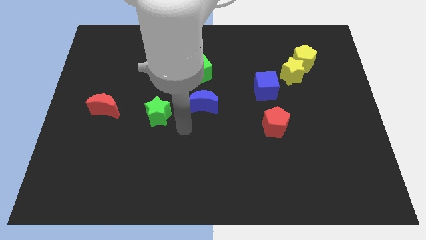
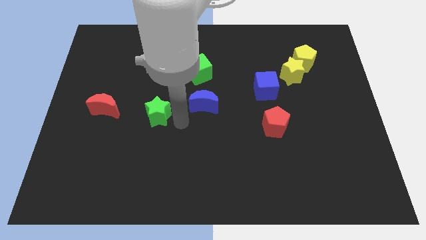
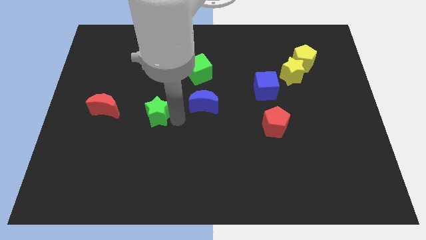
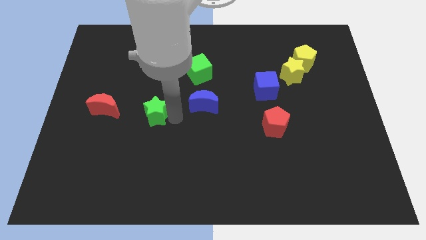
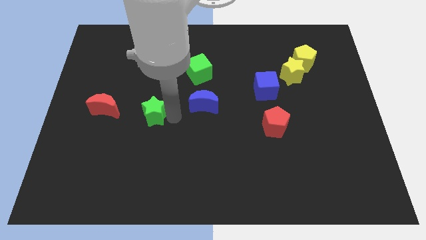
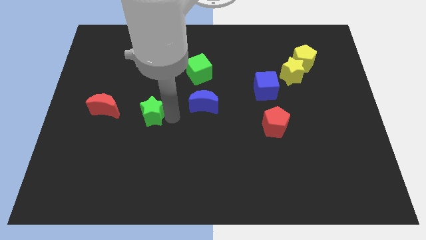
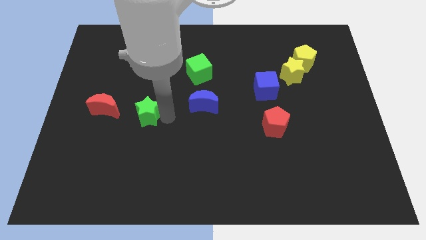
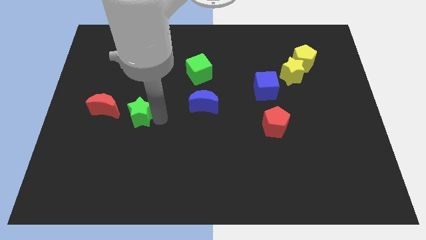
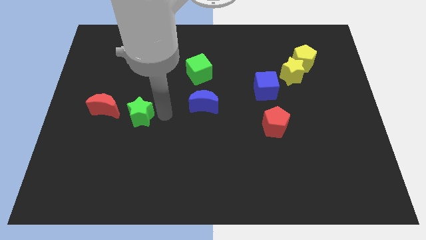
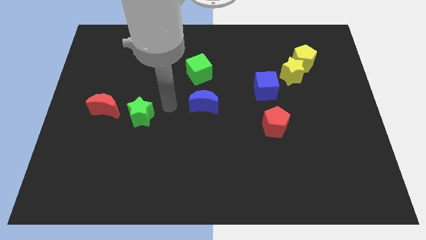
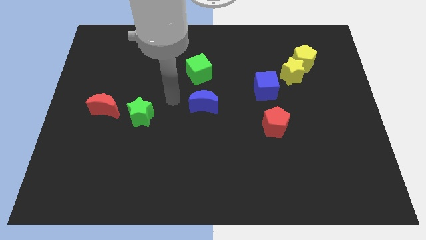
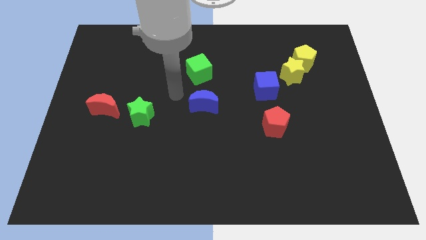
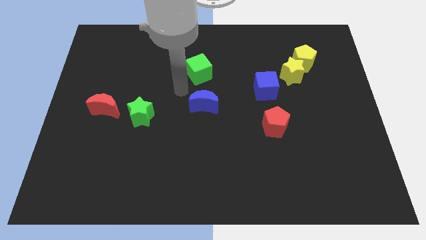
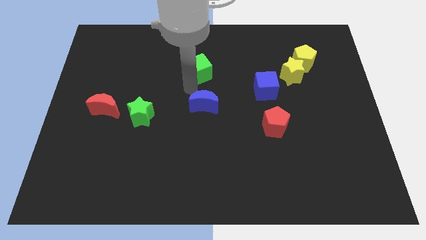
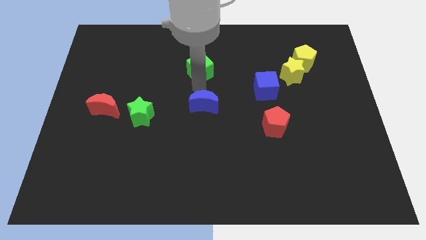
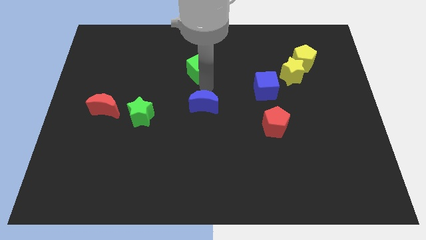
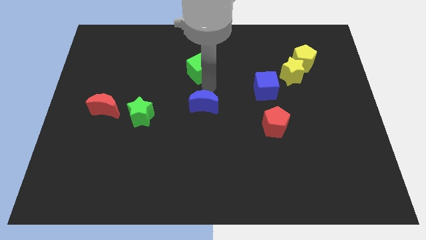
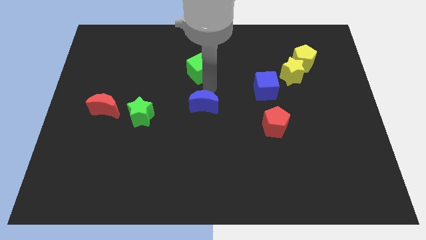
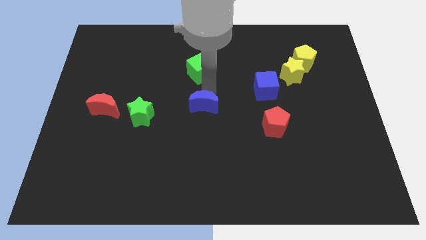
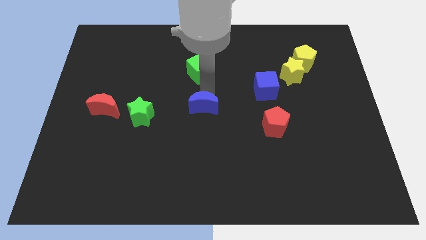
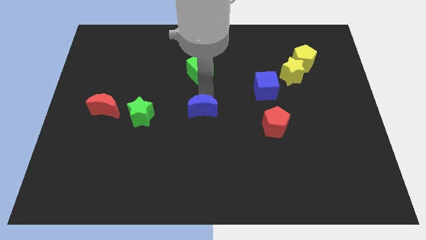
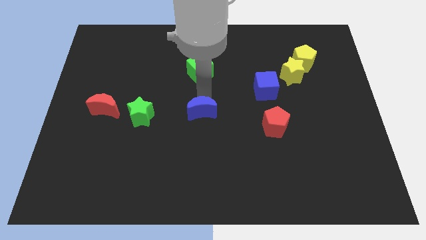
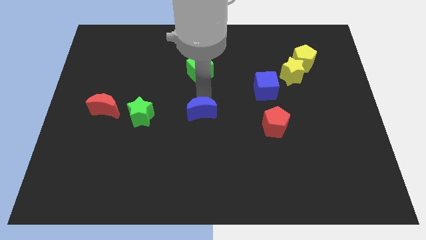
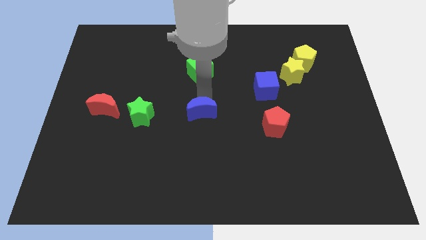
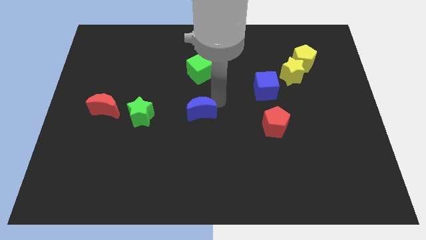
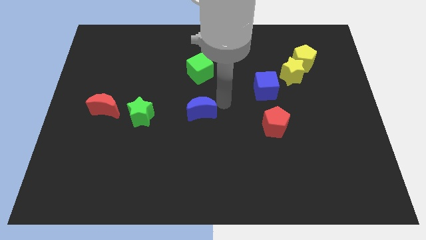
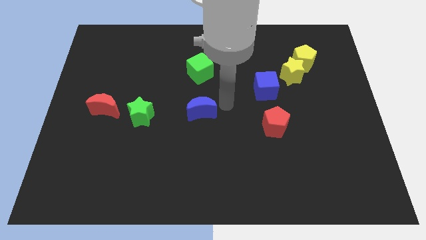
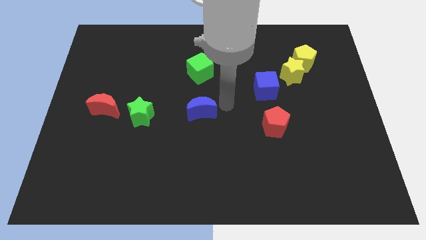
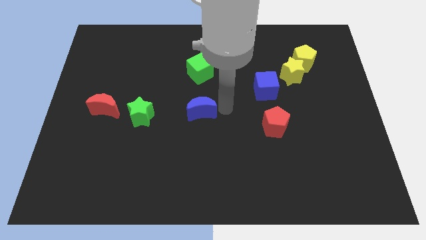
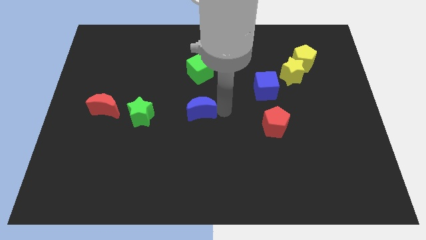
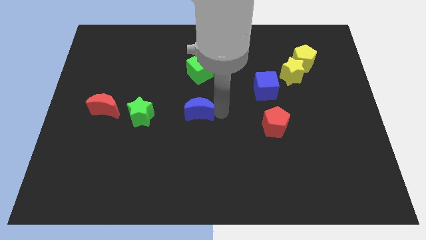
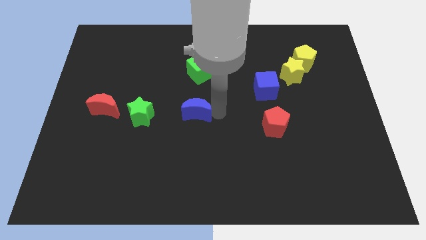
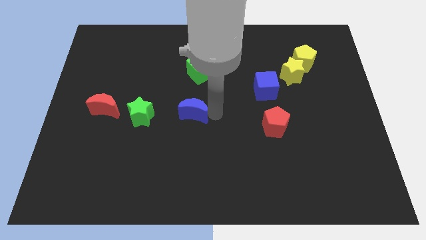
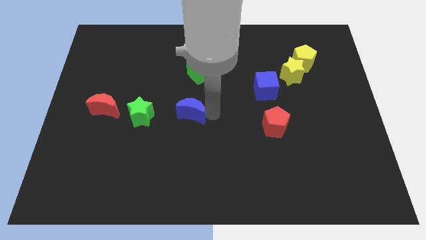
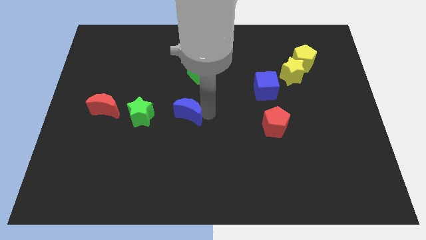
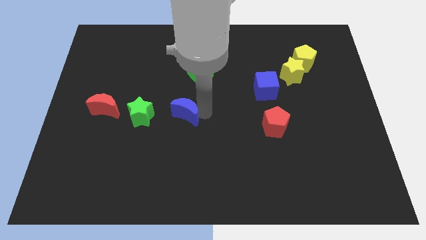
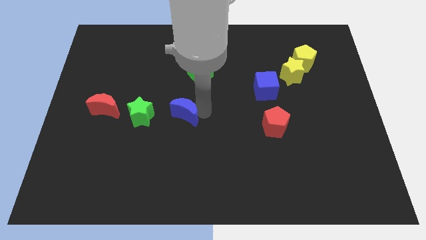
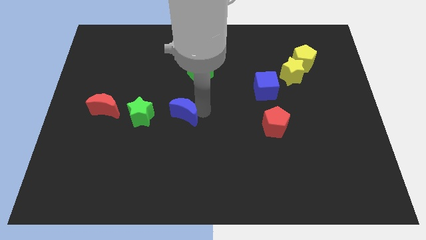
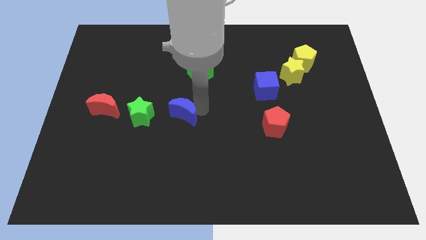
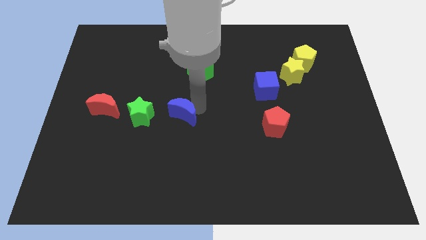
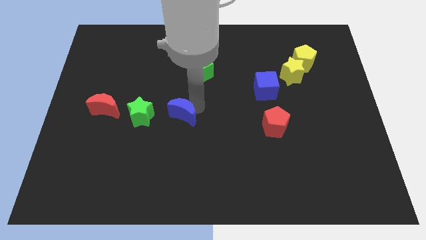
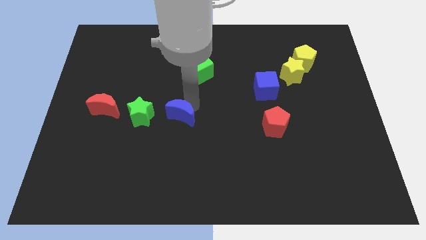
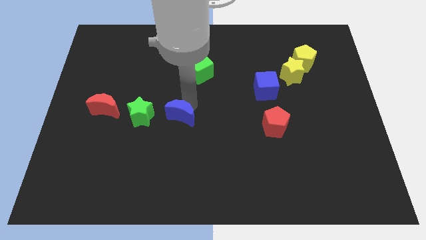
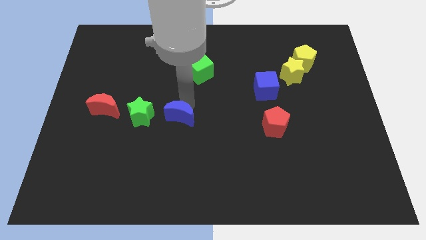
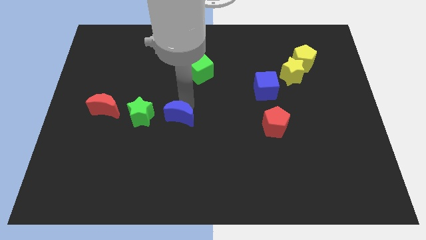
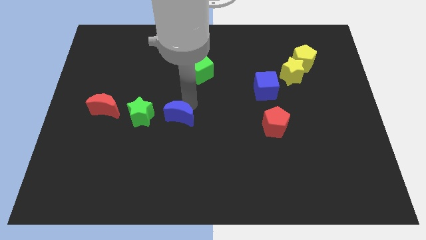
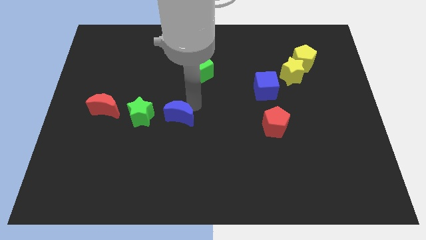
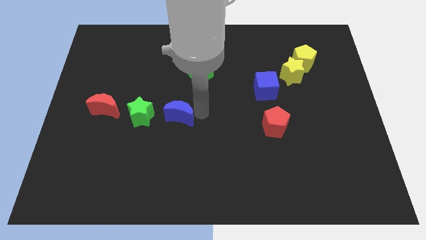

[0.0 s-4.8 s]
push the green star and blue moon to the right side of the red moon

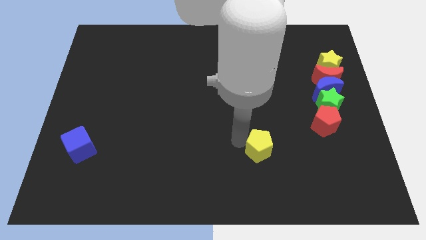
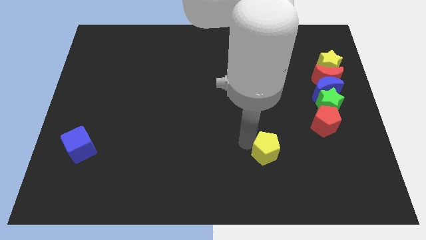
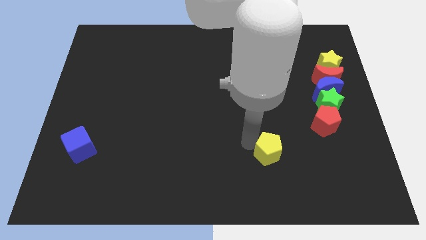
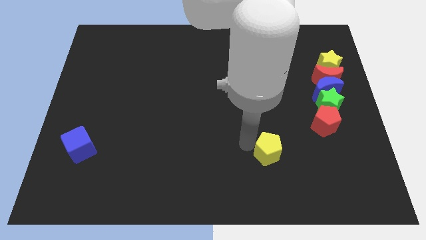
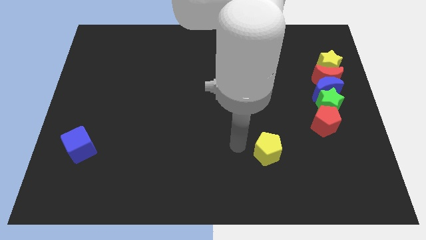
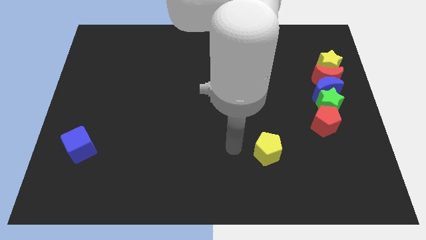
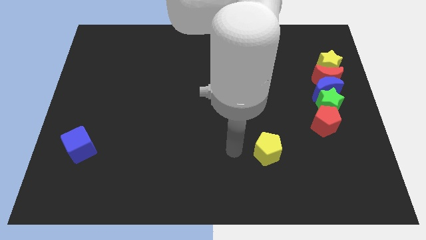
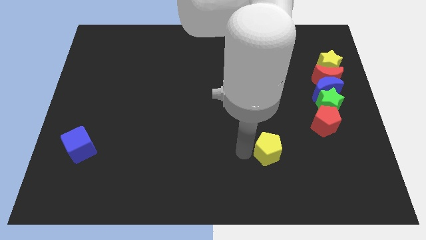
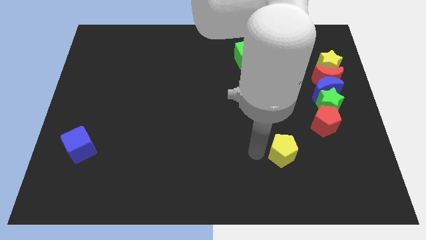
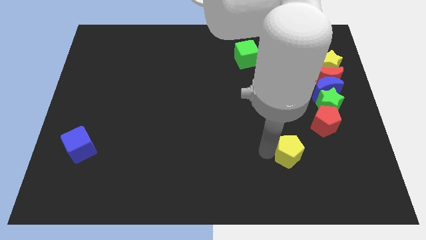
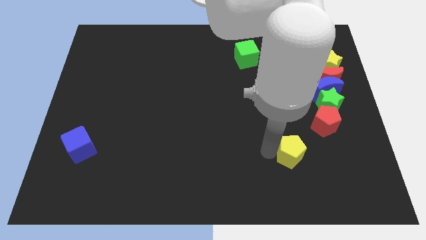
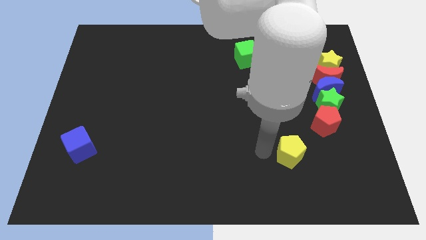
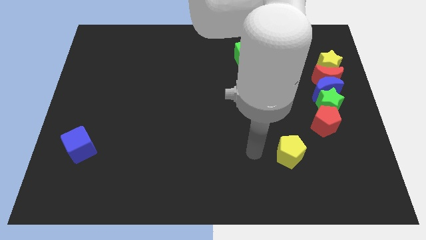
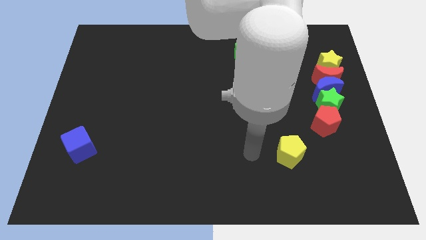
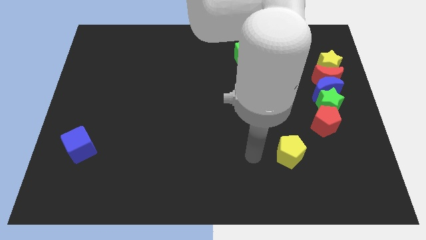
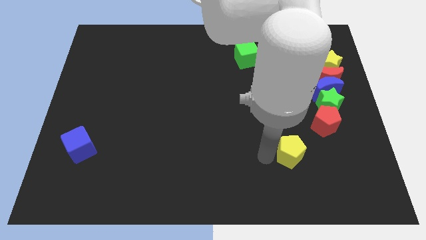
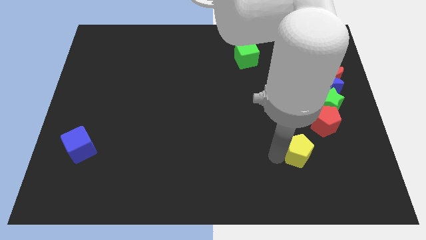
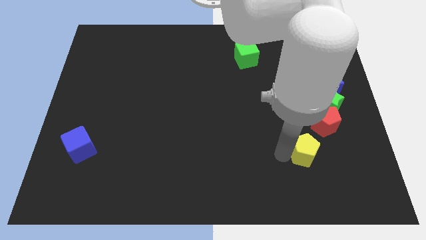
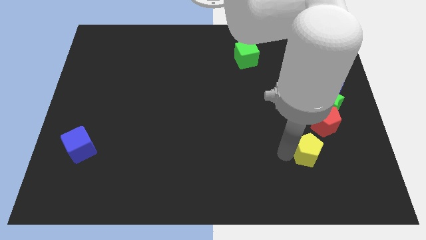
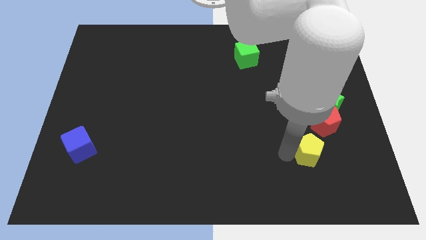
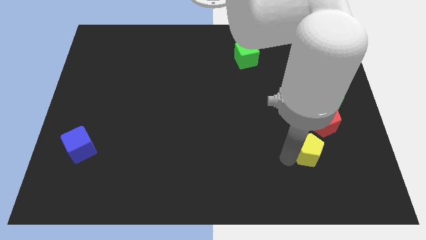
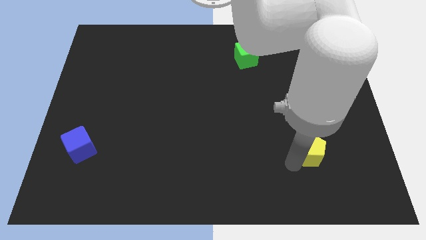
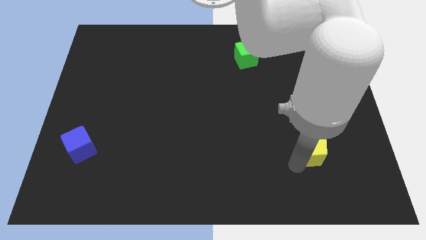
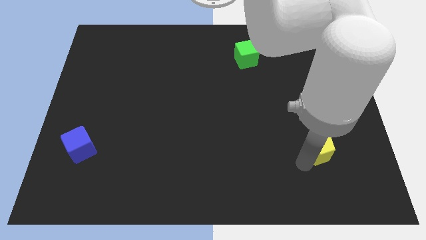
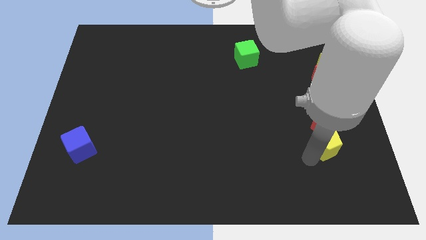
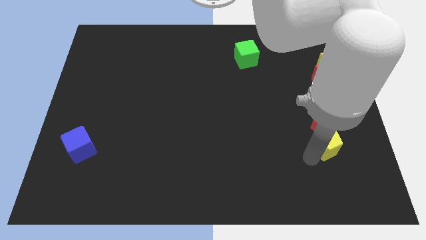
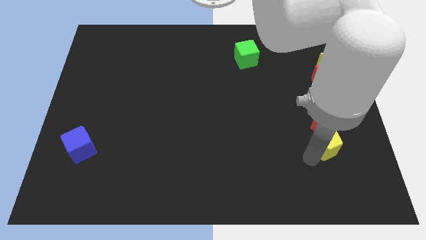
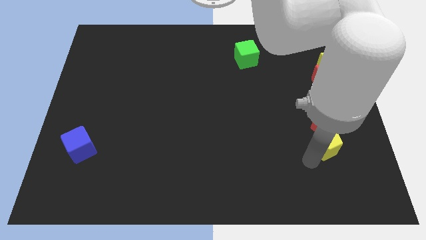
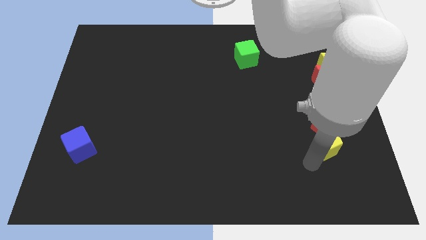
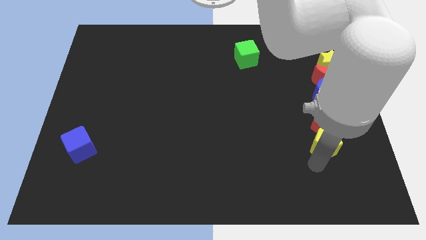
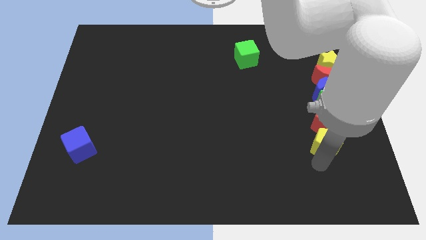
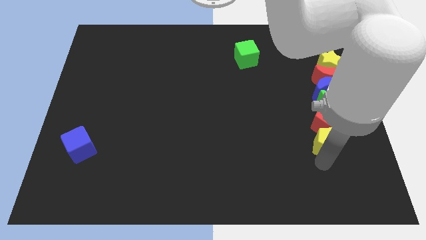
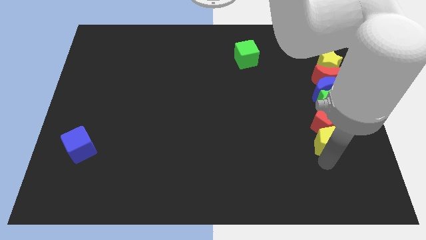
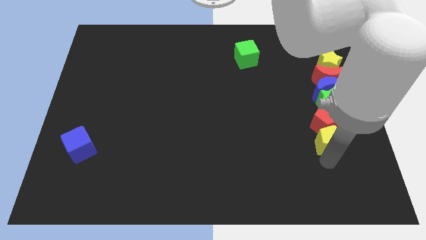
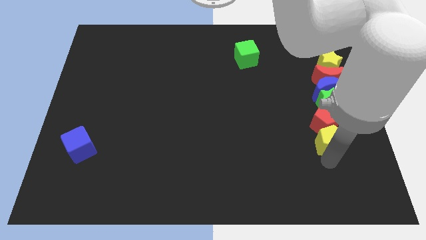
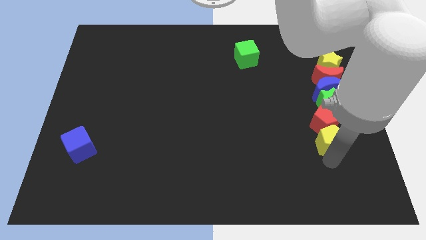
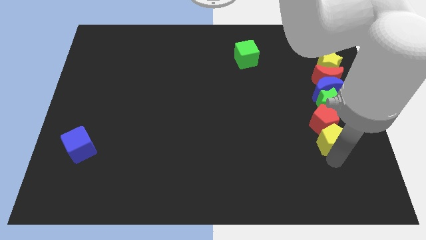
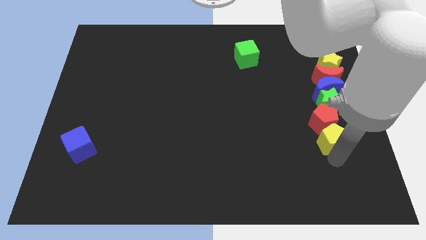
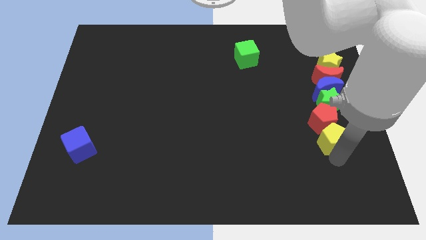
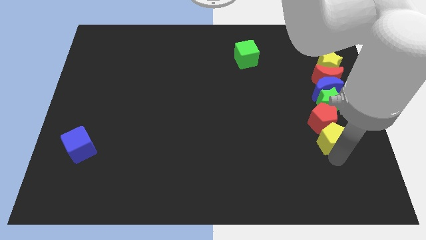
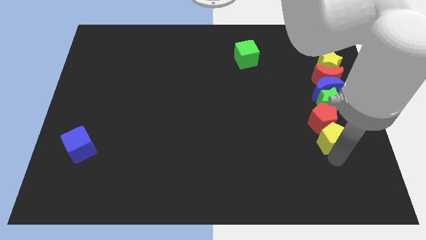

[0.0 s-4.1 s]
move the yellow pentagon below the red pentagon

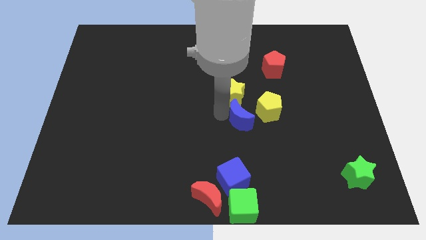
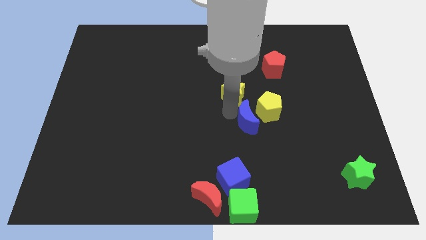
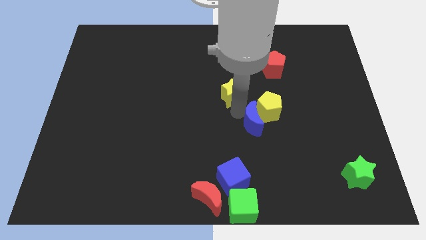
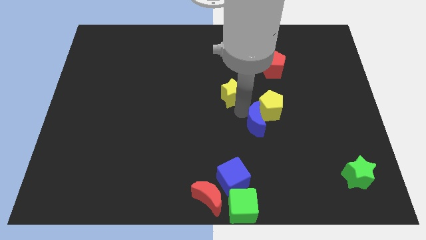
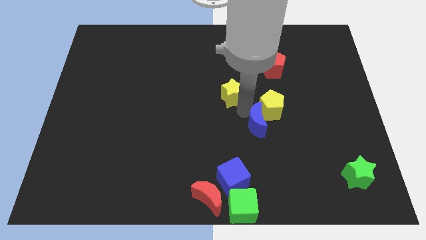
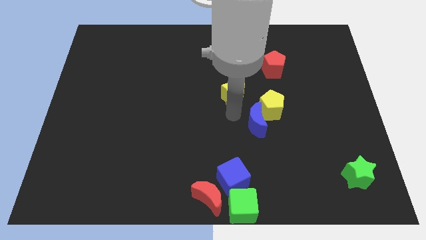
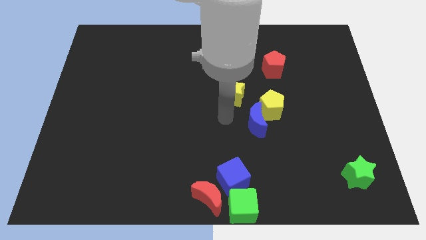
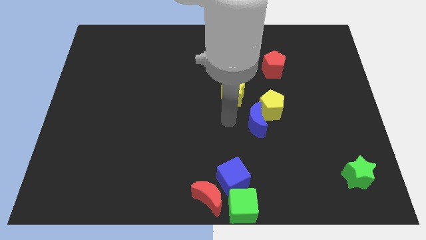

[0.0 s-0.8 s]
push the blue crescent into the left side of the yellow pentagon
